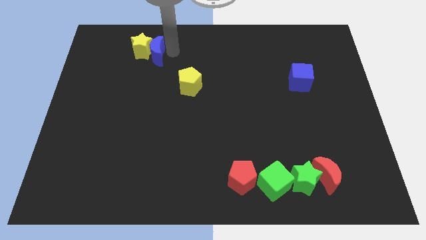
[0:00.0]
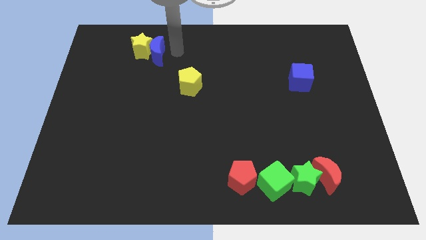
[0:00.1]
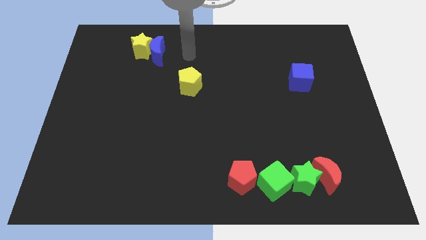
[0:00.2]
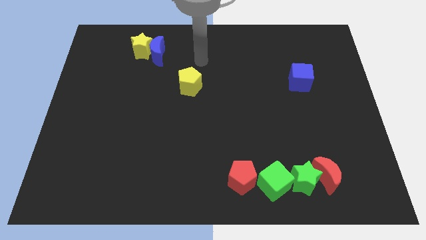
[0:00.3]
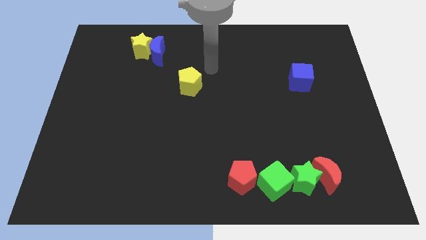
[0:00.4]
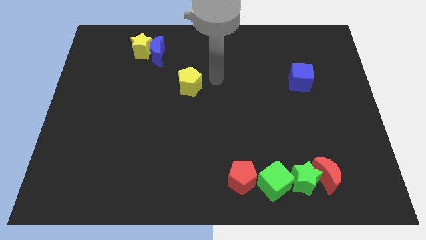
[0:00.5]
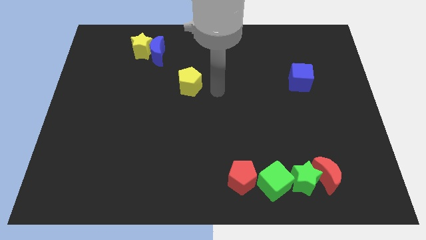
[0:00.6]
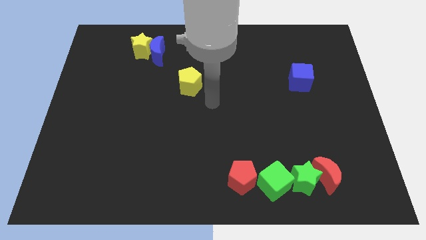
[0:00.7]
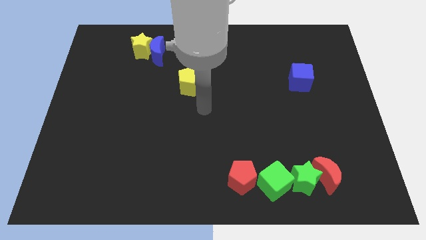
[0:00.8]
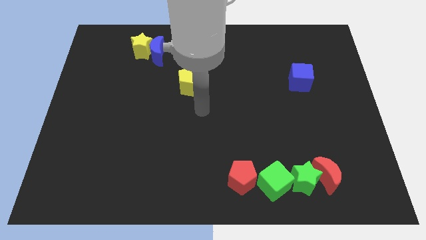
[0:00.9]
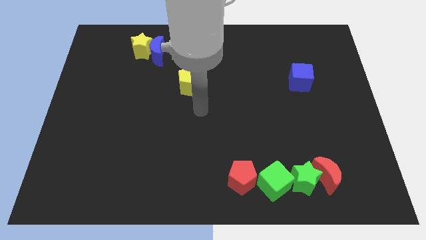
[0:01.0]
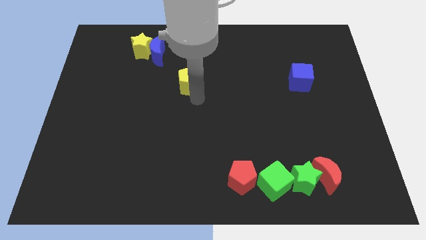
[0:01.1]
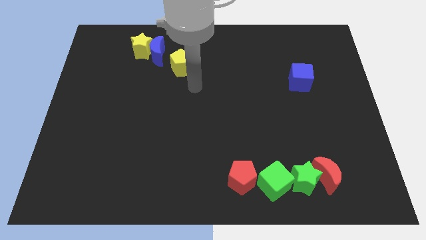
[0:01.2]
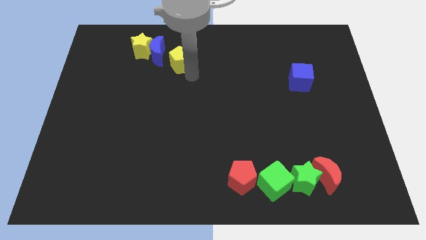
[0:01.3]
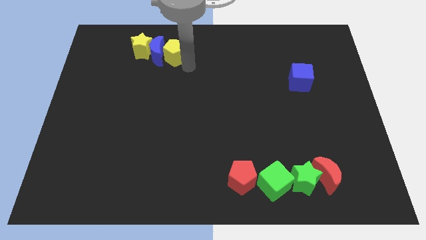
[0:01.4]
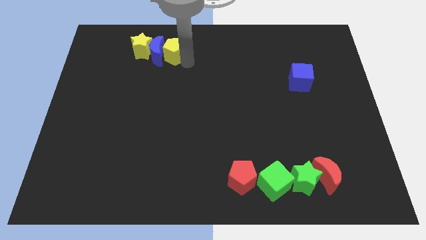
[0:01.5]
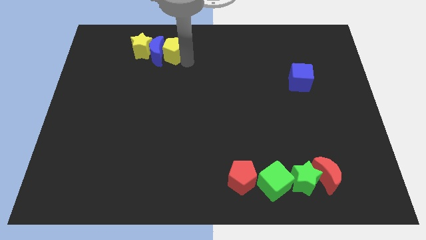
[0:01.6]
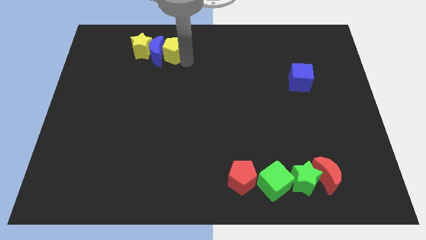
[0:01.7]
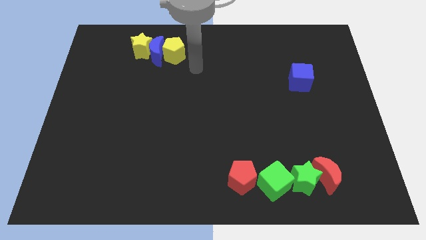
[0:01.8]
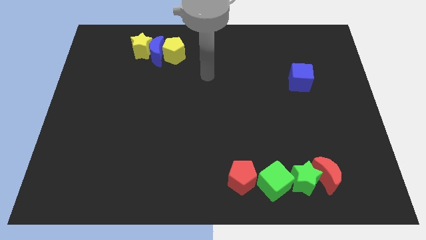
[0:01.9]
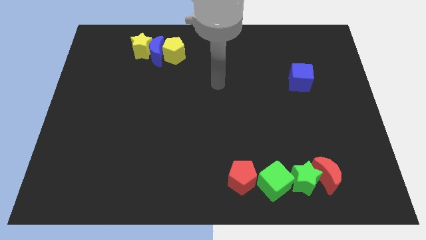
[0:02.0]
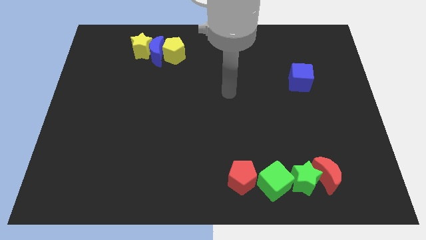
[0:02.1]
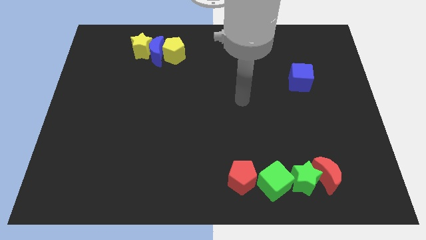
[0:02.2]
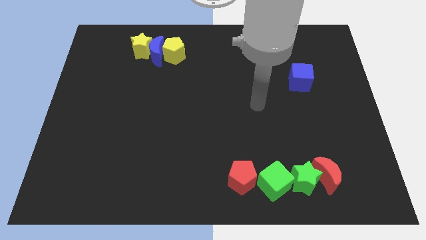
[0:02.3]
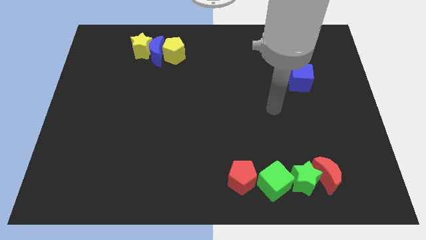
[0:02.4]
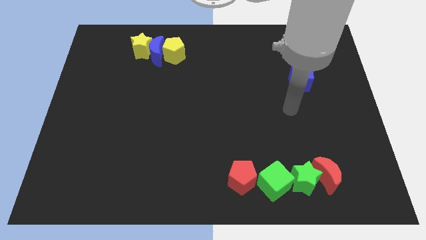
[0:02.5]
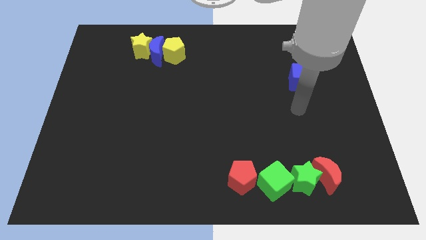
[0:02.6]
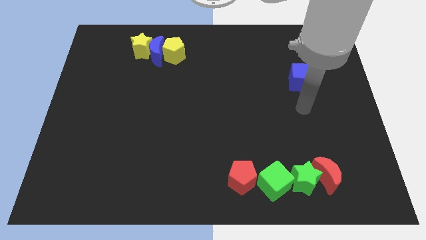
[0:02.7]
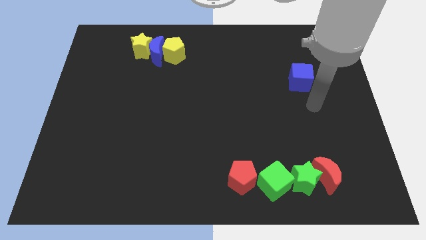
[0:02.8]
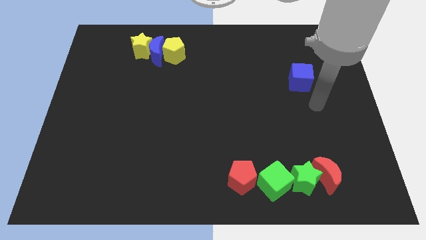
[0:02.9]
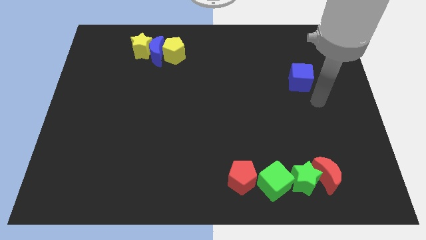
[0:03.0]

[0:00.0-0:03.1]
put the yellow pentagon to the right side of the blue moon

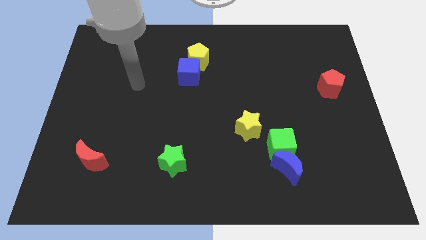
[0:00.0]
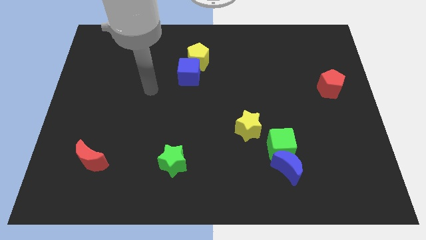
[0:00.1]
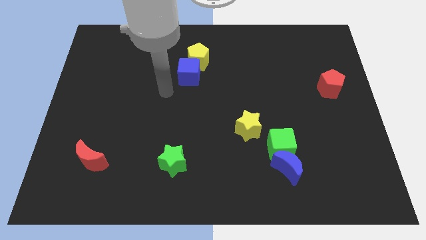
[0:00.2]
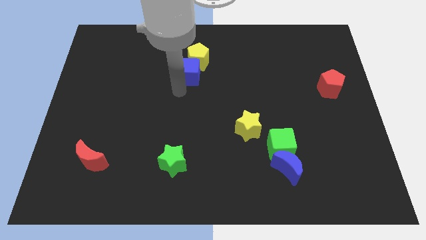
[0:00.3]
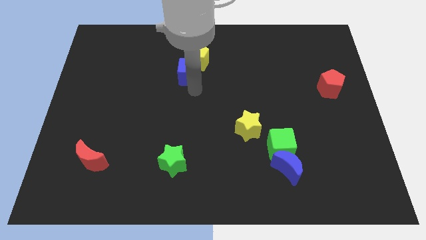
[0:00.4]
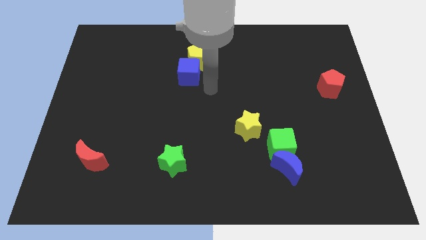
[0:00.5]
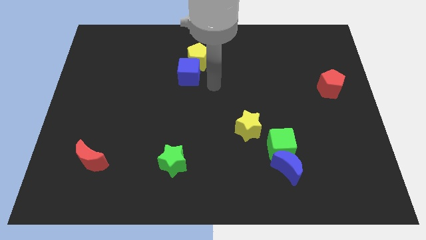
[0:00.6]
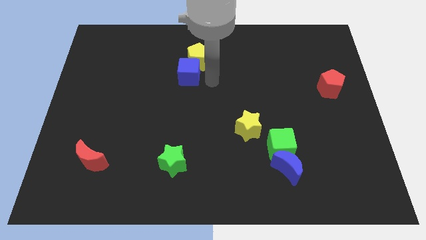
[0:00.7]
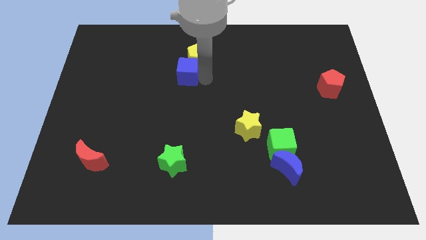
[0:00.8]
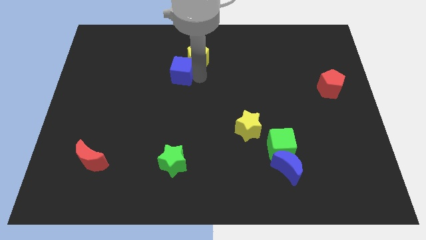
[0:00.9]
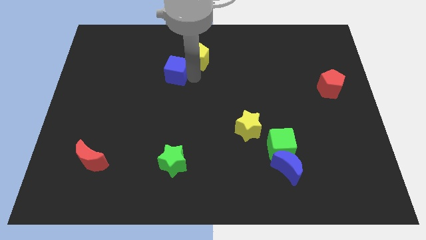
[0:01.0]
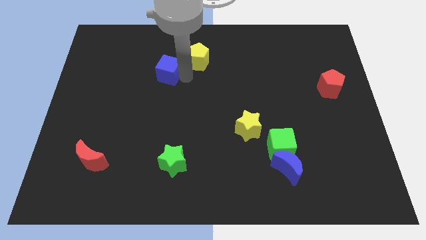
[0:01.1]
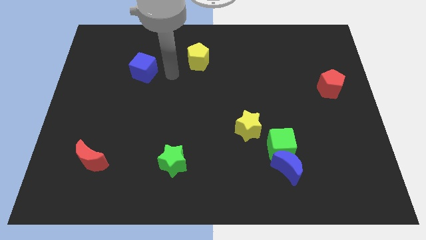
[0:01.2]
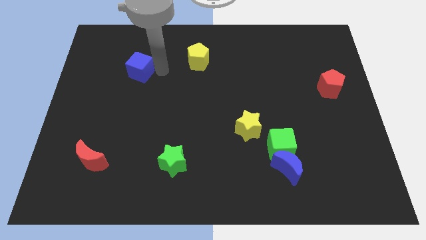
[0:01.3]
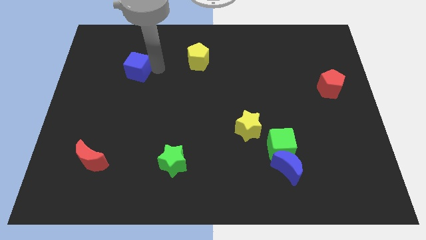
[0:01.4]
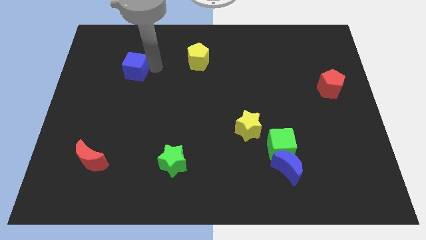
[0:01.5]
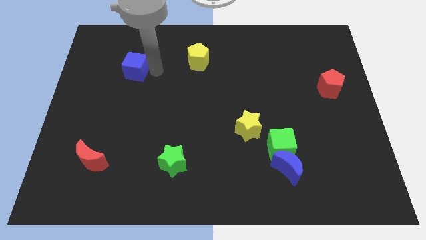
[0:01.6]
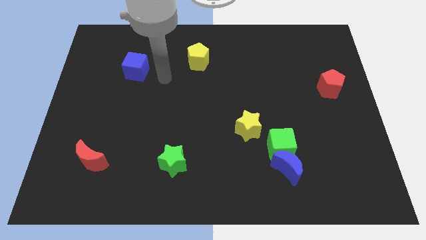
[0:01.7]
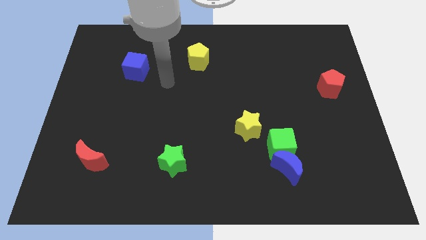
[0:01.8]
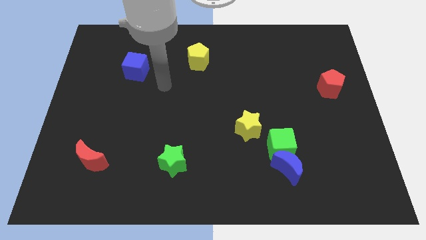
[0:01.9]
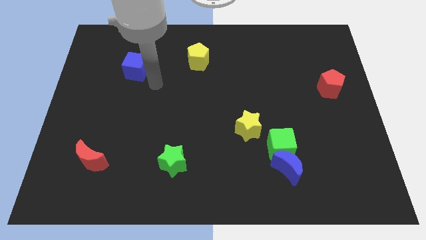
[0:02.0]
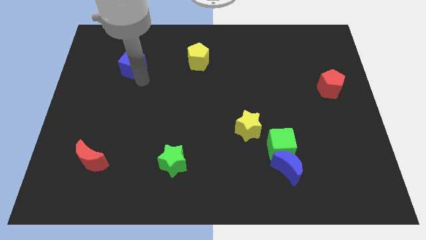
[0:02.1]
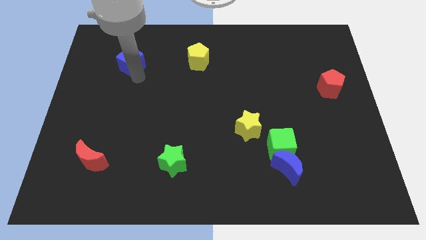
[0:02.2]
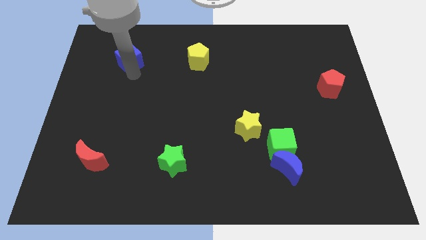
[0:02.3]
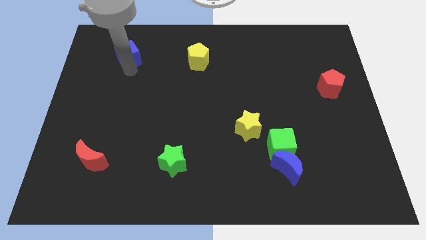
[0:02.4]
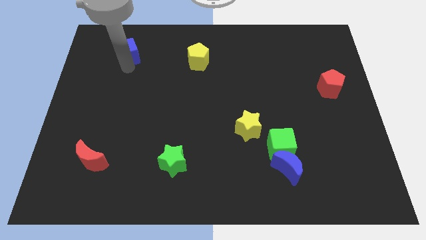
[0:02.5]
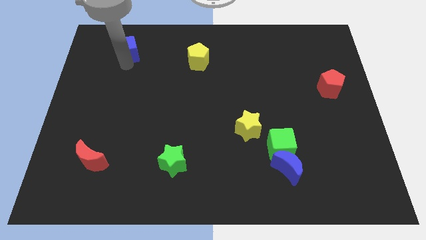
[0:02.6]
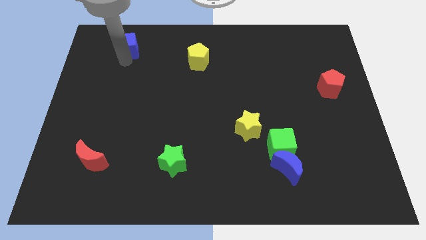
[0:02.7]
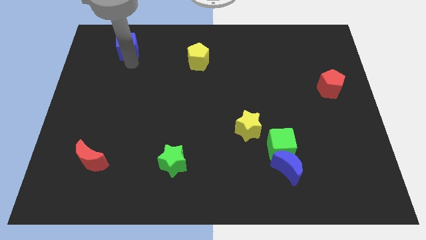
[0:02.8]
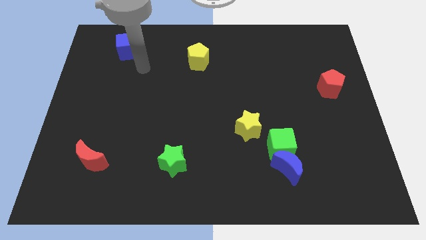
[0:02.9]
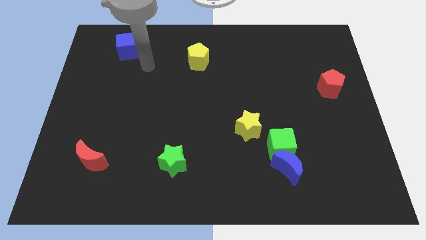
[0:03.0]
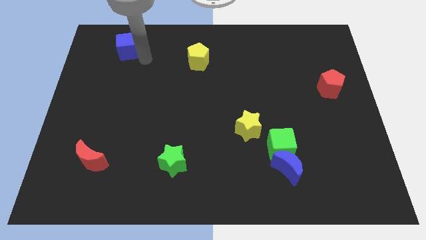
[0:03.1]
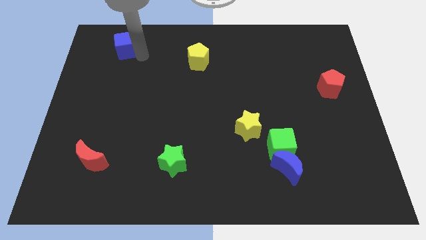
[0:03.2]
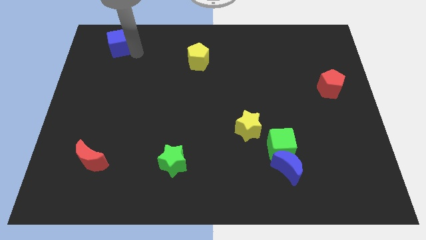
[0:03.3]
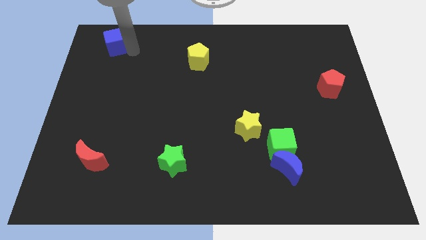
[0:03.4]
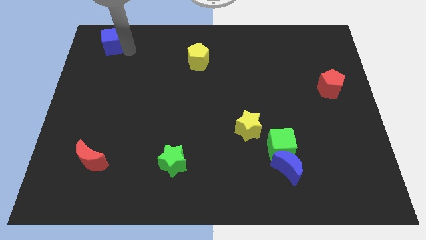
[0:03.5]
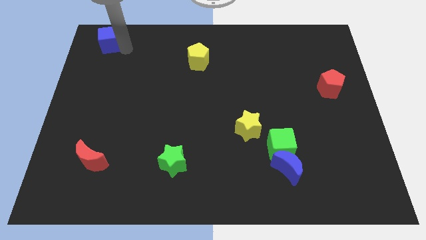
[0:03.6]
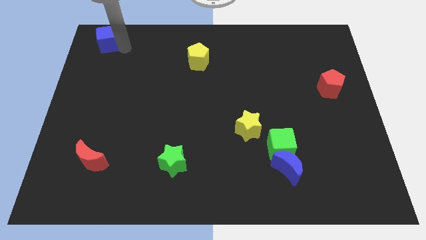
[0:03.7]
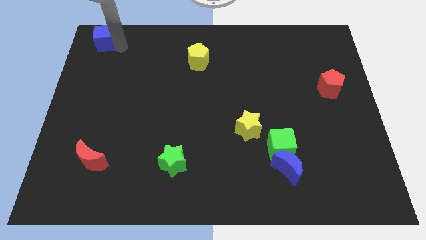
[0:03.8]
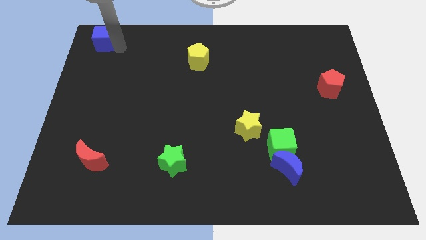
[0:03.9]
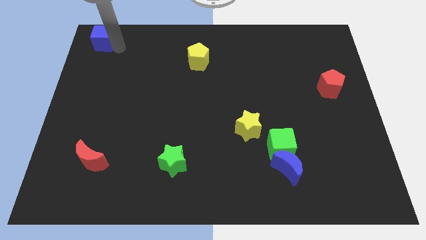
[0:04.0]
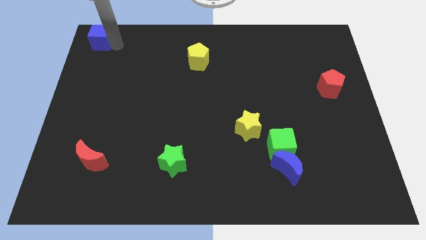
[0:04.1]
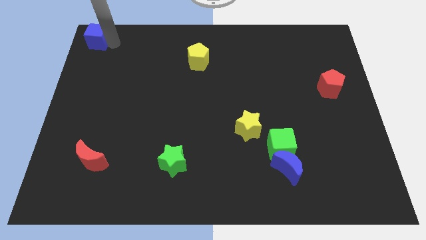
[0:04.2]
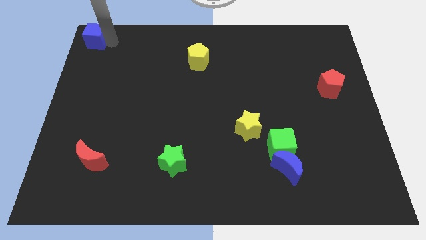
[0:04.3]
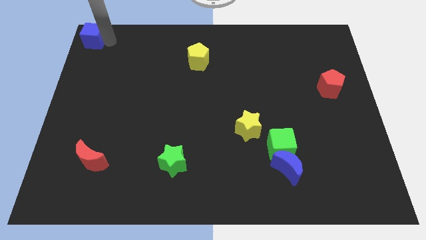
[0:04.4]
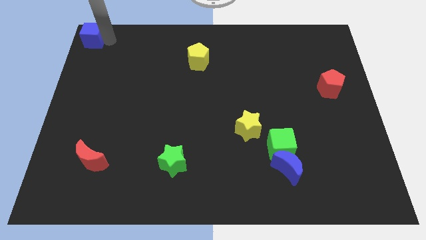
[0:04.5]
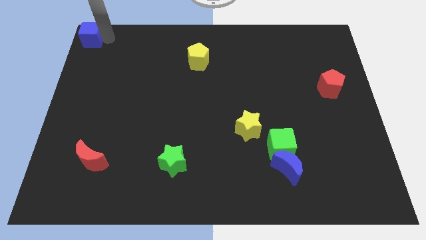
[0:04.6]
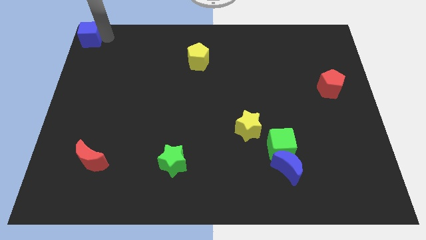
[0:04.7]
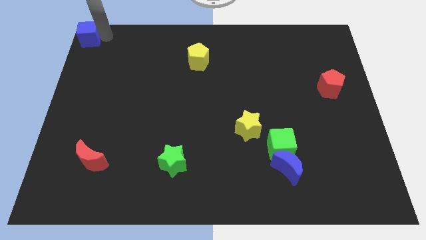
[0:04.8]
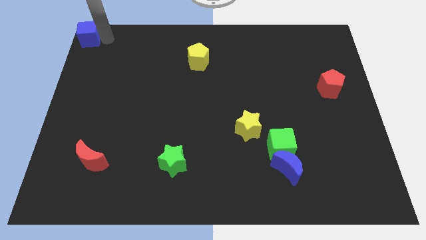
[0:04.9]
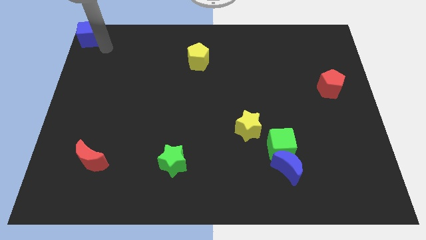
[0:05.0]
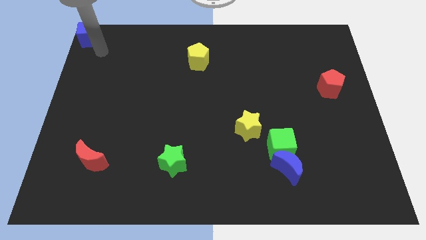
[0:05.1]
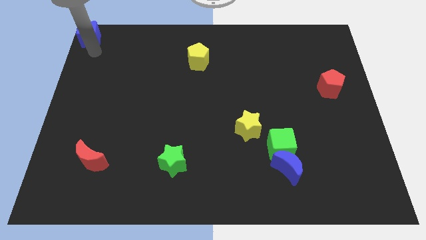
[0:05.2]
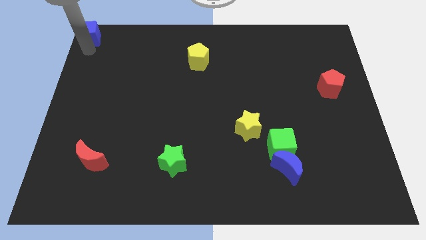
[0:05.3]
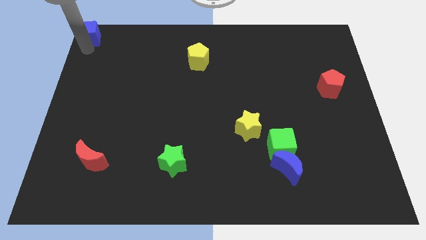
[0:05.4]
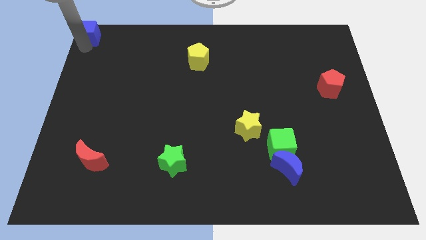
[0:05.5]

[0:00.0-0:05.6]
move the blue cube to the top left of the board

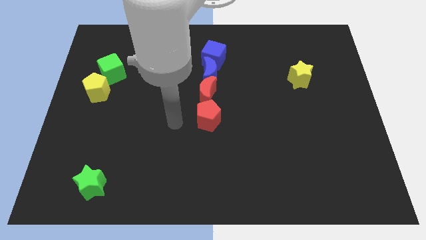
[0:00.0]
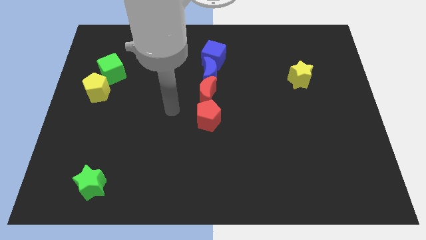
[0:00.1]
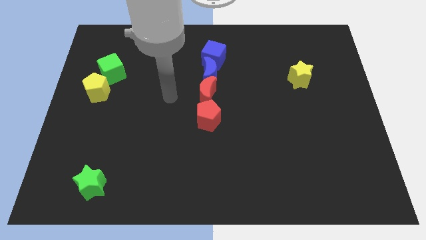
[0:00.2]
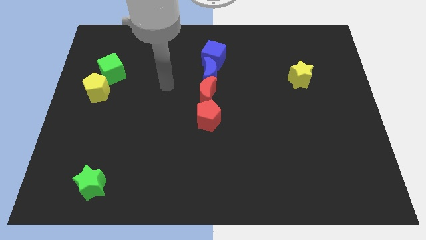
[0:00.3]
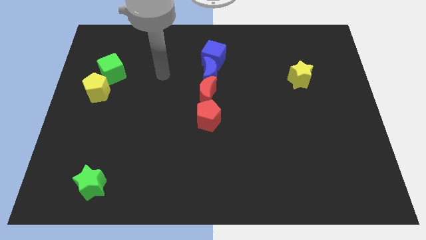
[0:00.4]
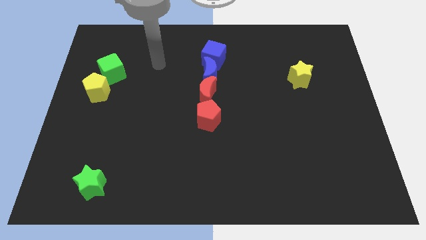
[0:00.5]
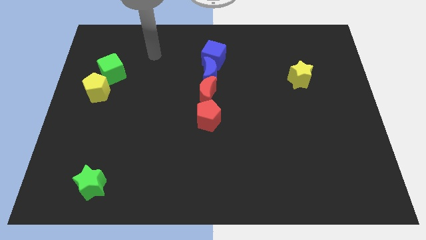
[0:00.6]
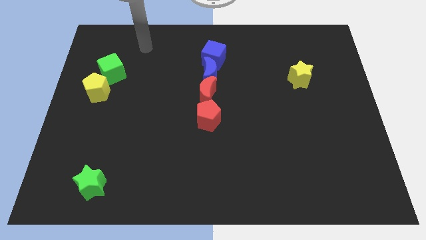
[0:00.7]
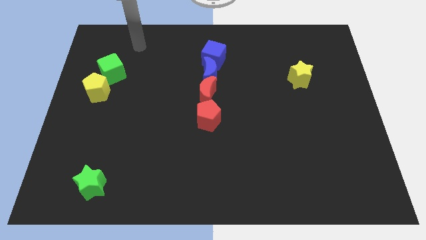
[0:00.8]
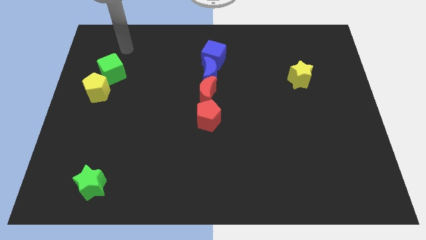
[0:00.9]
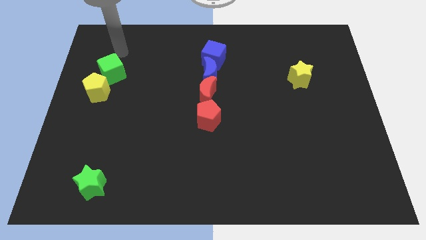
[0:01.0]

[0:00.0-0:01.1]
point the arm at the top of the green cube
